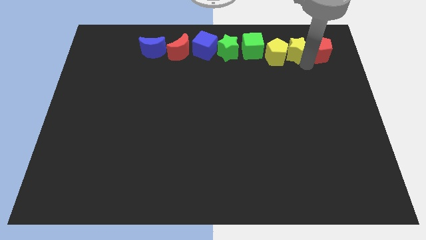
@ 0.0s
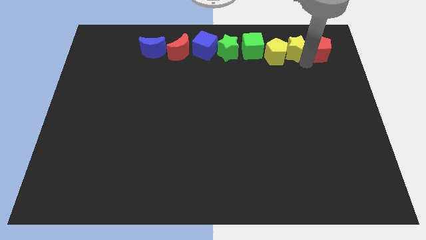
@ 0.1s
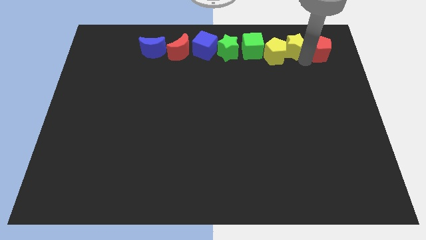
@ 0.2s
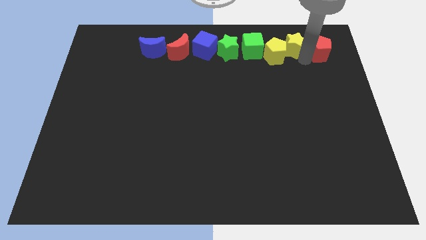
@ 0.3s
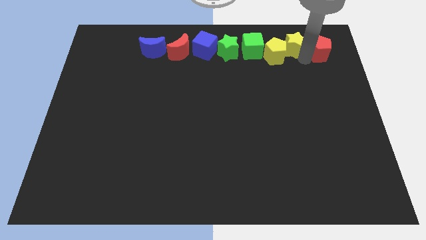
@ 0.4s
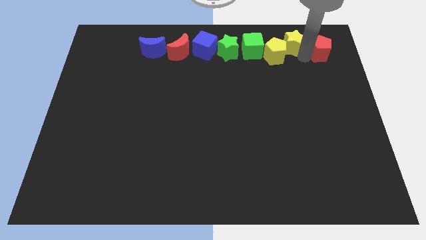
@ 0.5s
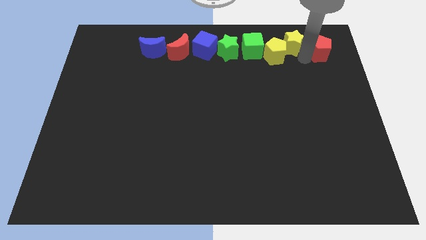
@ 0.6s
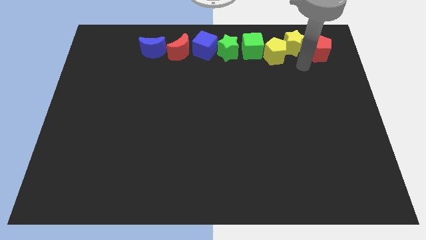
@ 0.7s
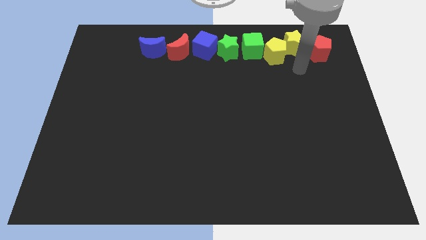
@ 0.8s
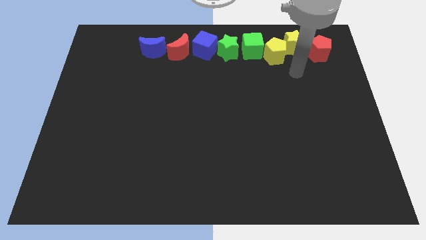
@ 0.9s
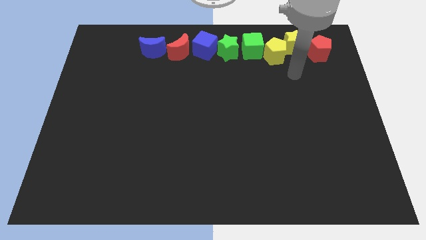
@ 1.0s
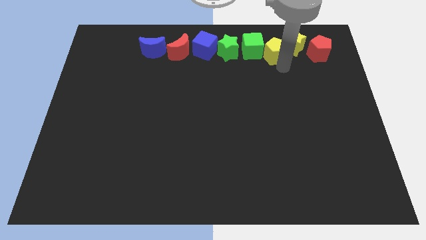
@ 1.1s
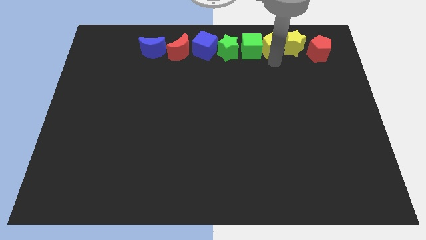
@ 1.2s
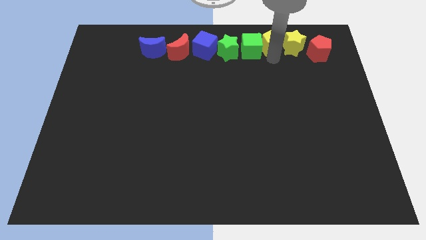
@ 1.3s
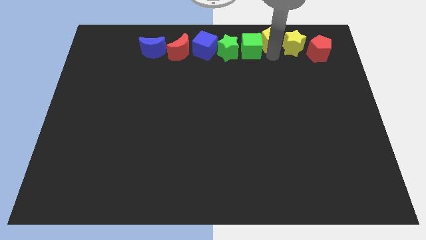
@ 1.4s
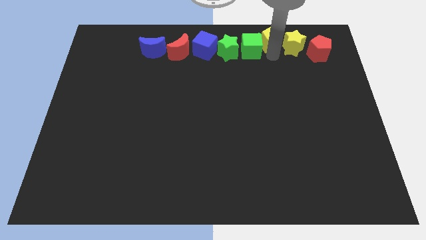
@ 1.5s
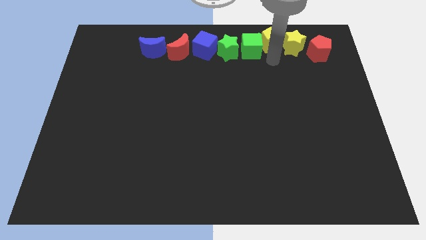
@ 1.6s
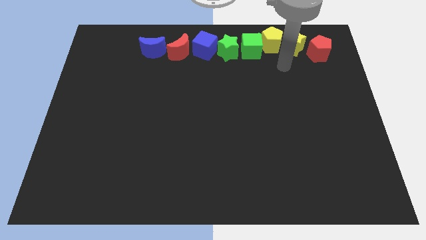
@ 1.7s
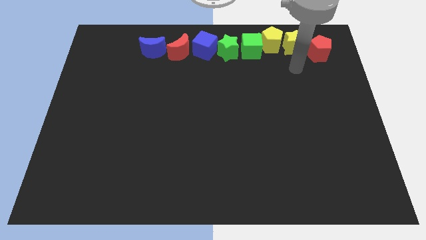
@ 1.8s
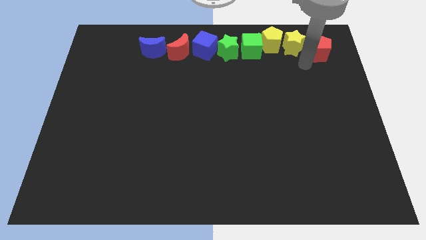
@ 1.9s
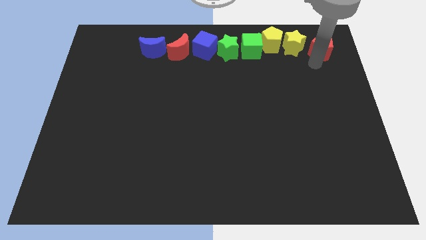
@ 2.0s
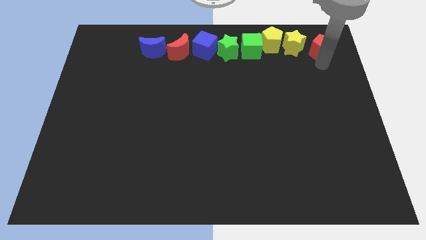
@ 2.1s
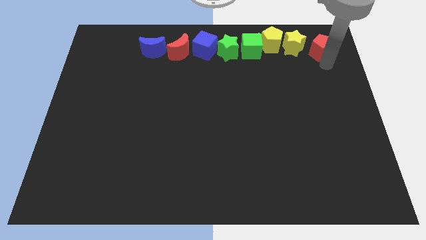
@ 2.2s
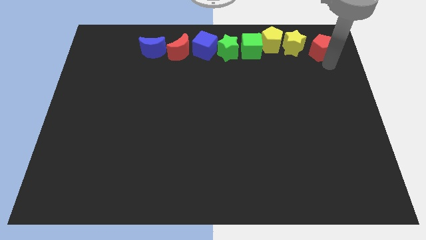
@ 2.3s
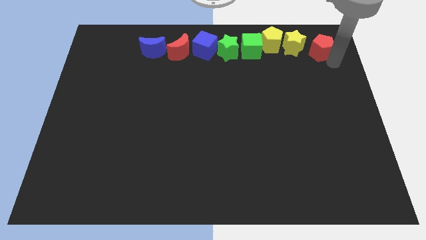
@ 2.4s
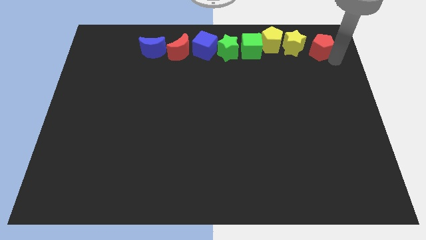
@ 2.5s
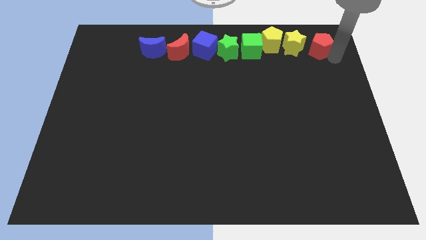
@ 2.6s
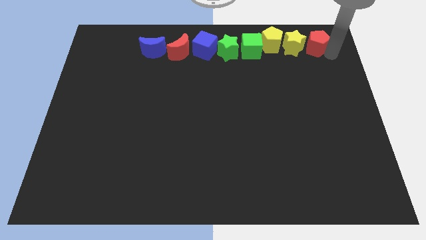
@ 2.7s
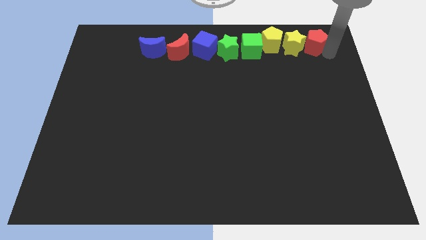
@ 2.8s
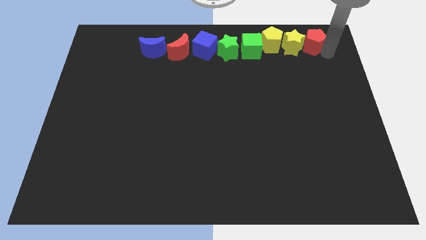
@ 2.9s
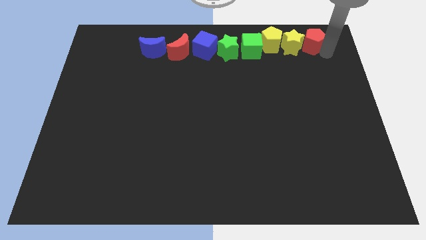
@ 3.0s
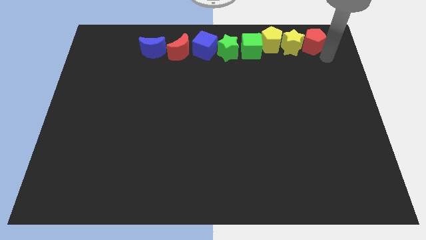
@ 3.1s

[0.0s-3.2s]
slightly move red pentagon to the top right

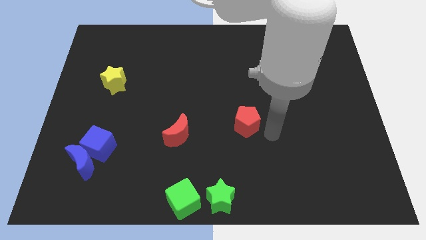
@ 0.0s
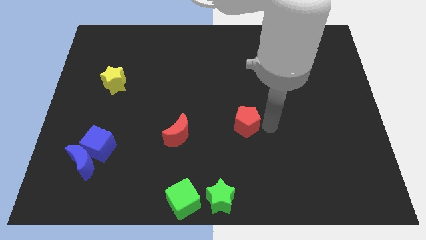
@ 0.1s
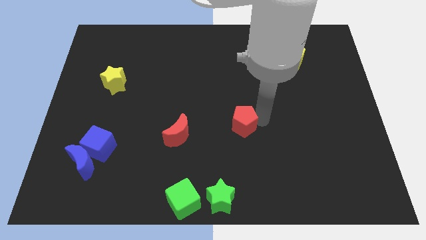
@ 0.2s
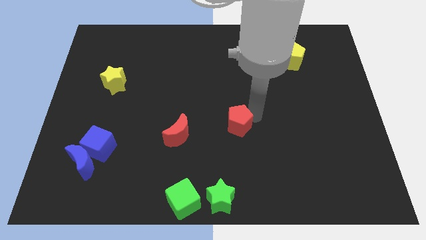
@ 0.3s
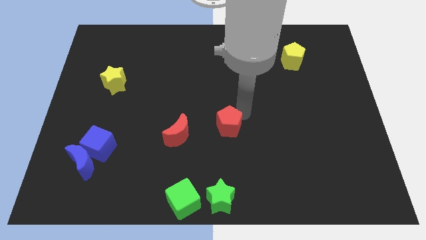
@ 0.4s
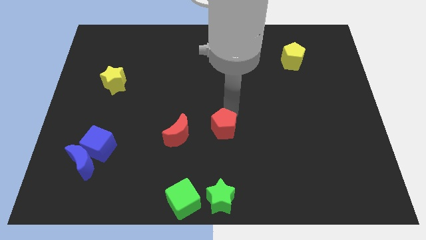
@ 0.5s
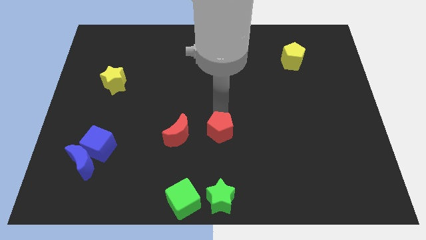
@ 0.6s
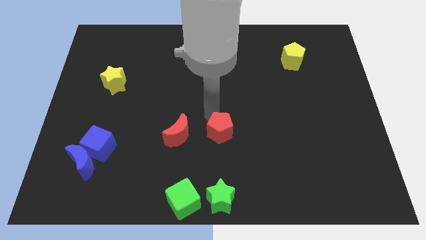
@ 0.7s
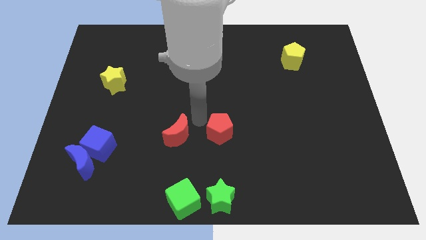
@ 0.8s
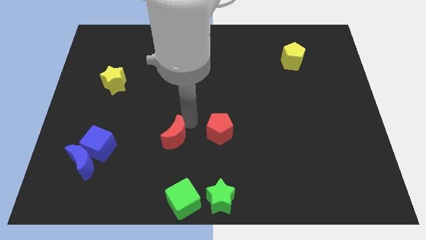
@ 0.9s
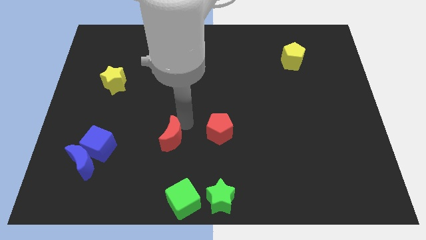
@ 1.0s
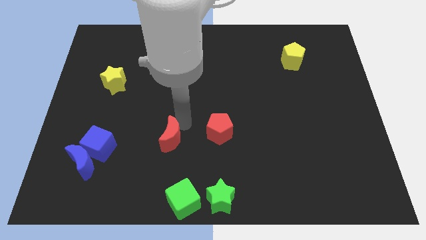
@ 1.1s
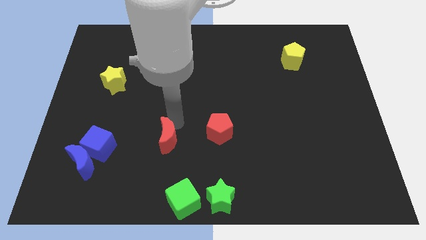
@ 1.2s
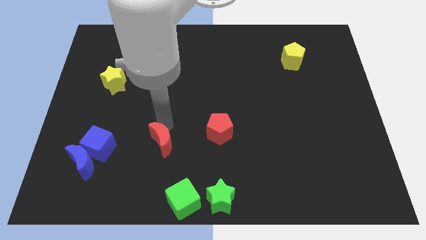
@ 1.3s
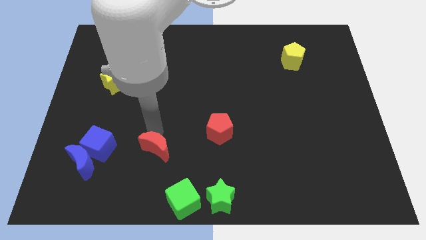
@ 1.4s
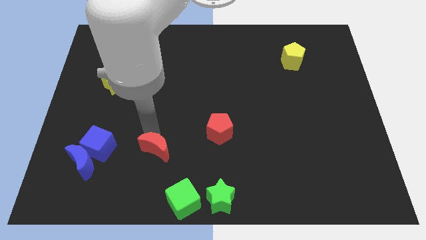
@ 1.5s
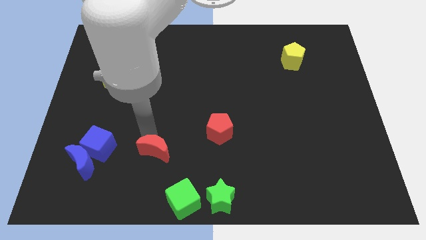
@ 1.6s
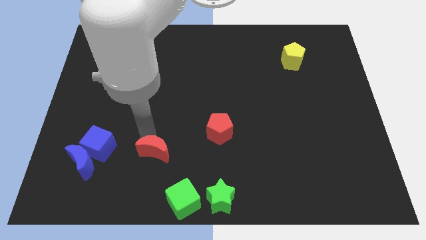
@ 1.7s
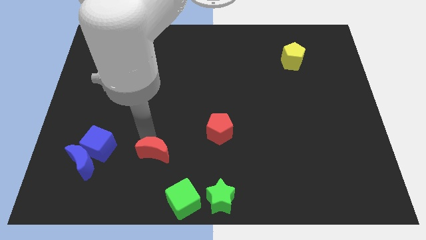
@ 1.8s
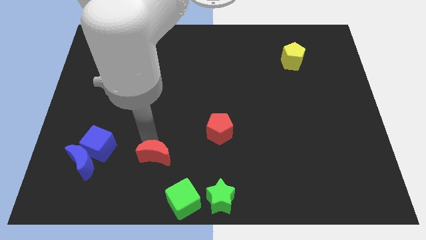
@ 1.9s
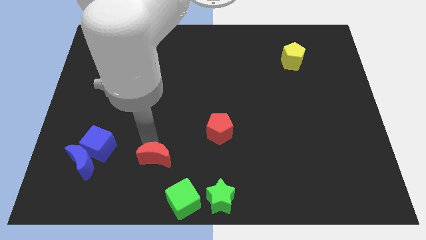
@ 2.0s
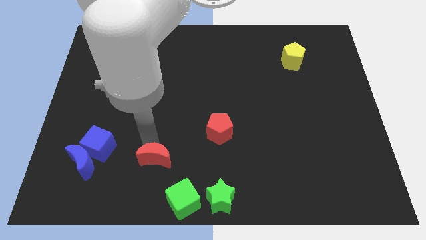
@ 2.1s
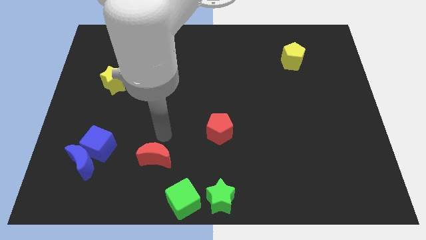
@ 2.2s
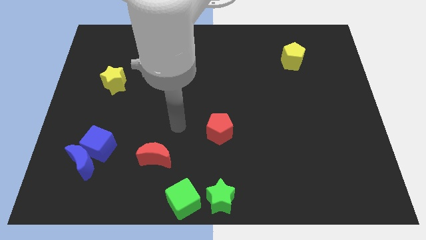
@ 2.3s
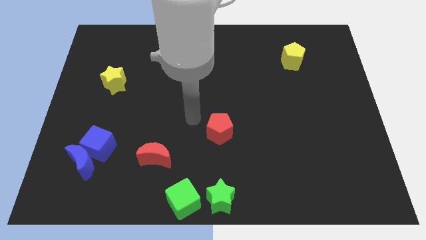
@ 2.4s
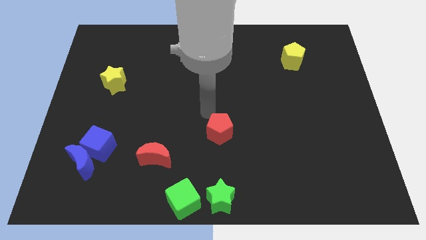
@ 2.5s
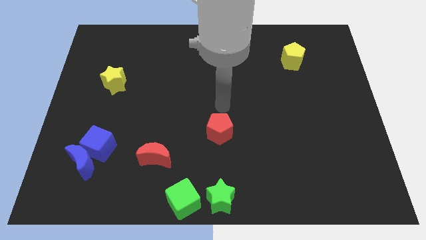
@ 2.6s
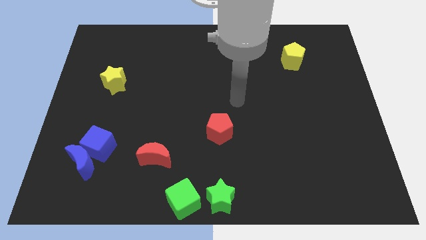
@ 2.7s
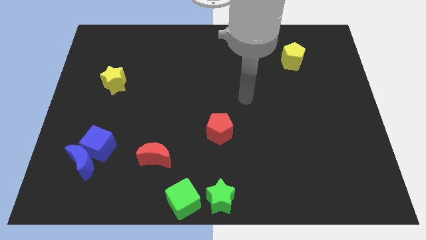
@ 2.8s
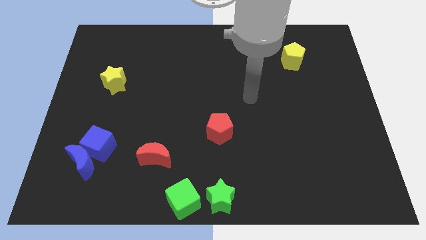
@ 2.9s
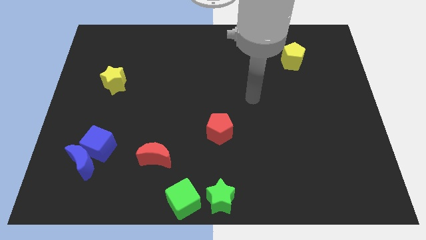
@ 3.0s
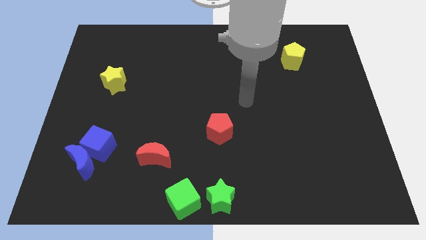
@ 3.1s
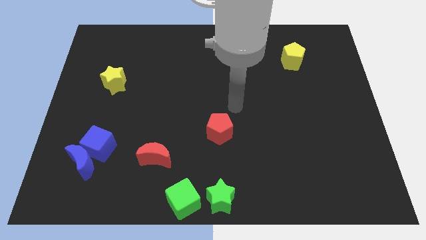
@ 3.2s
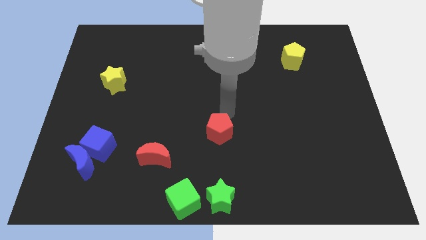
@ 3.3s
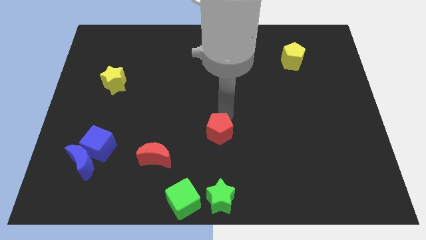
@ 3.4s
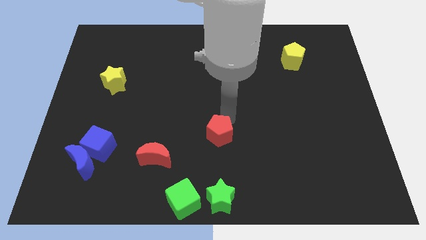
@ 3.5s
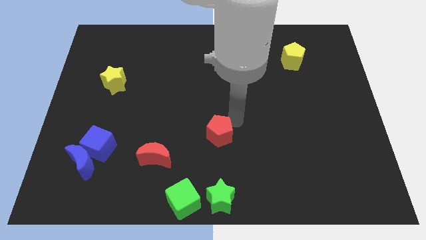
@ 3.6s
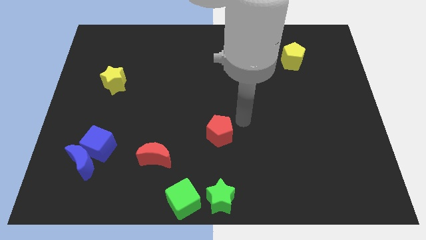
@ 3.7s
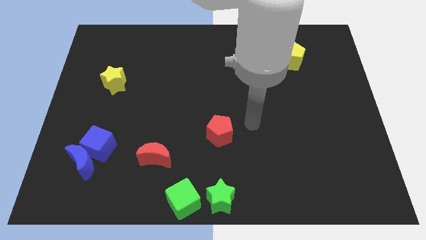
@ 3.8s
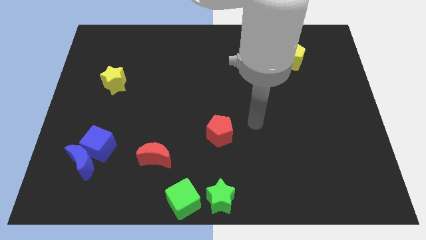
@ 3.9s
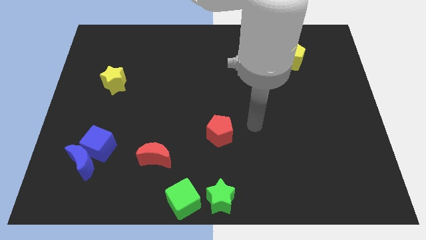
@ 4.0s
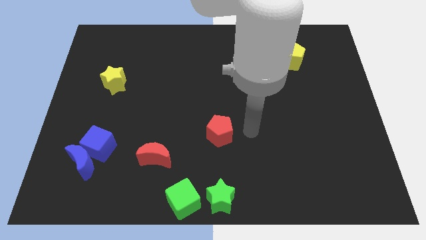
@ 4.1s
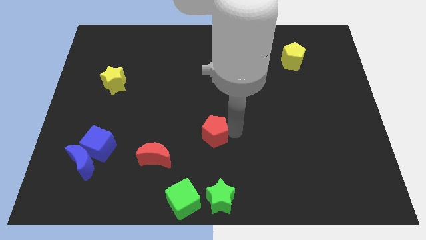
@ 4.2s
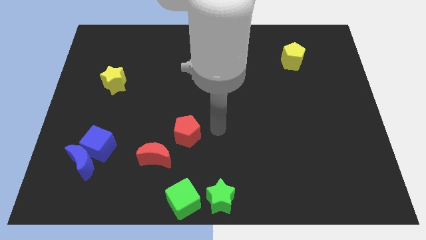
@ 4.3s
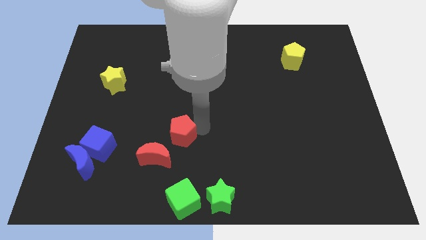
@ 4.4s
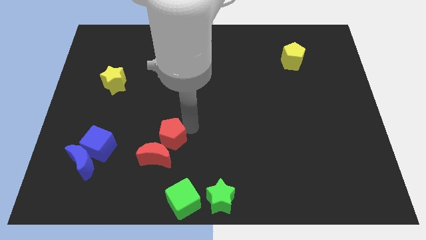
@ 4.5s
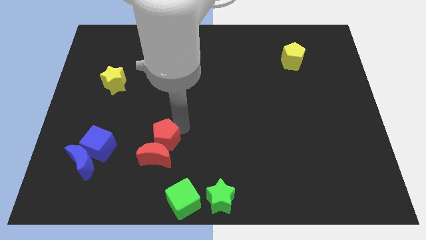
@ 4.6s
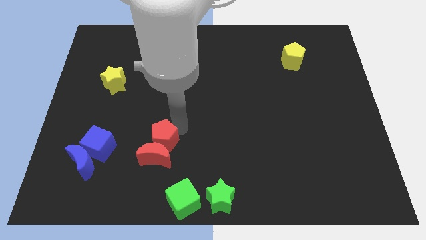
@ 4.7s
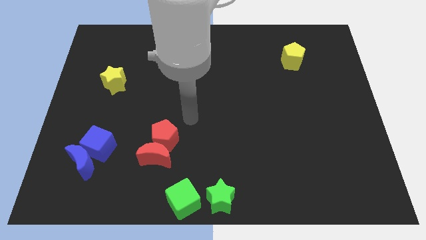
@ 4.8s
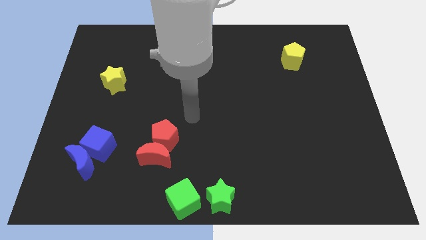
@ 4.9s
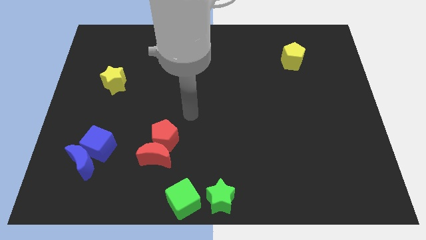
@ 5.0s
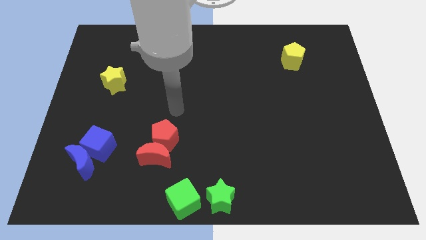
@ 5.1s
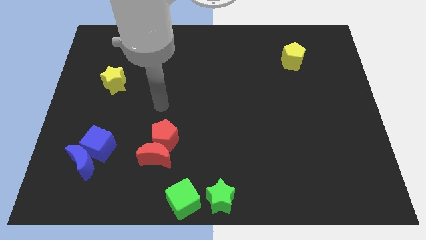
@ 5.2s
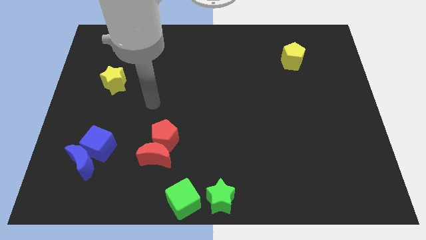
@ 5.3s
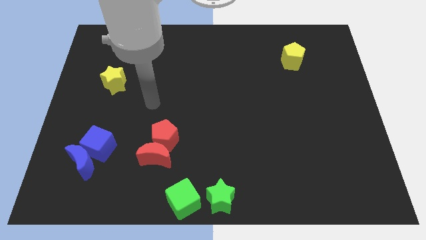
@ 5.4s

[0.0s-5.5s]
place the red pentagon to the top of red crescent

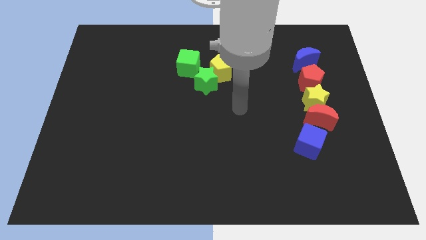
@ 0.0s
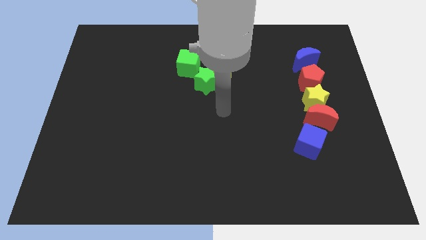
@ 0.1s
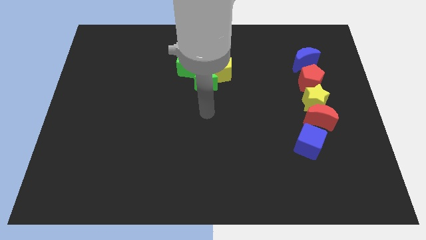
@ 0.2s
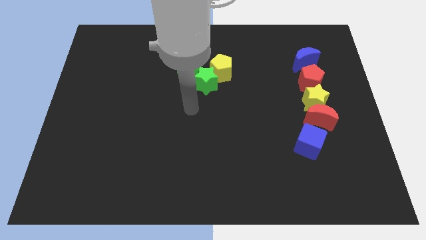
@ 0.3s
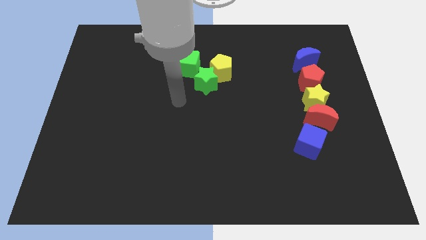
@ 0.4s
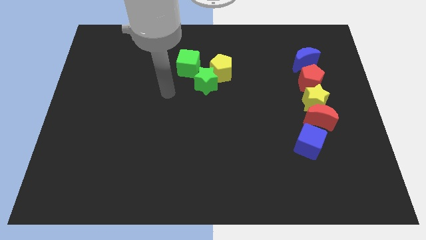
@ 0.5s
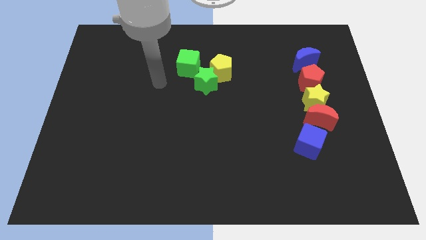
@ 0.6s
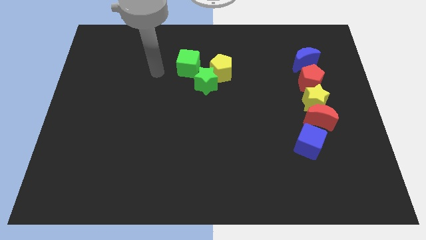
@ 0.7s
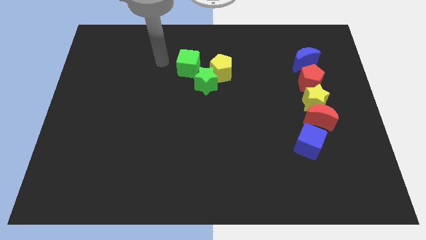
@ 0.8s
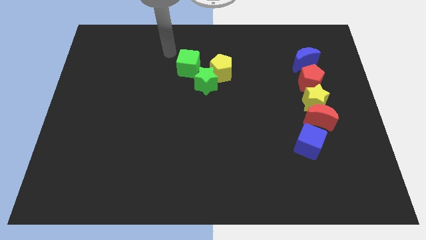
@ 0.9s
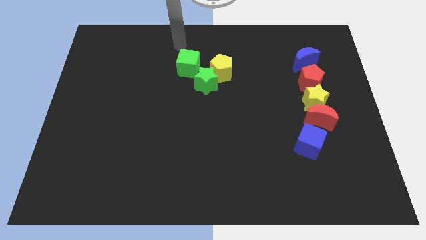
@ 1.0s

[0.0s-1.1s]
move your arm away from red moon
